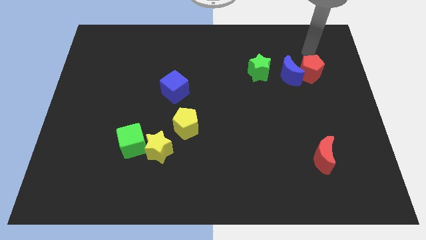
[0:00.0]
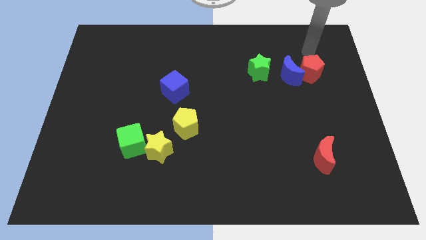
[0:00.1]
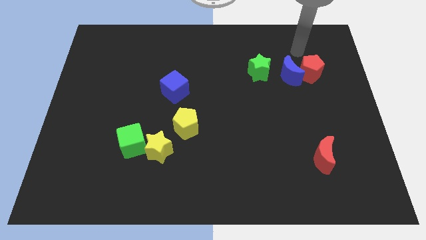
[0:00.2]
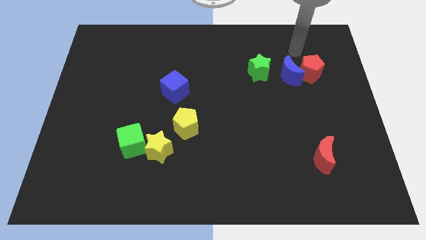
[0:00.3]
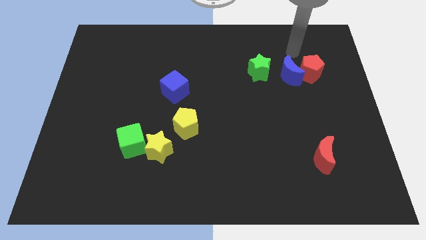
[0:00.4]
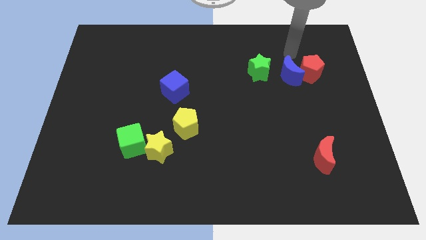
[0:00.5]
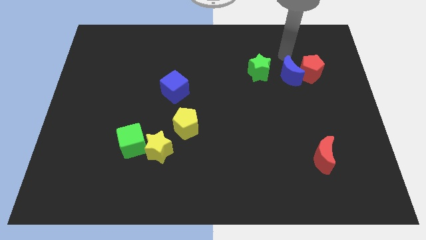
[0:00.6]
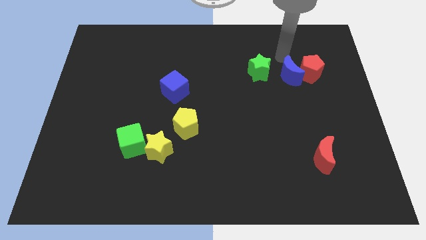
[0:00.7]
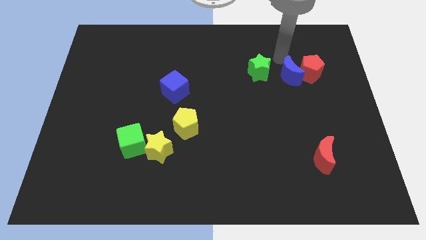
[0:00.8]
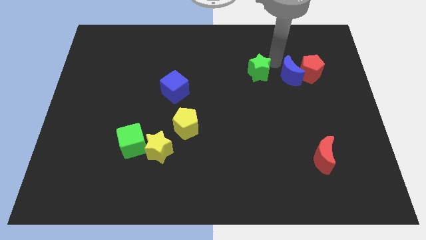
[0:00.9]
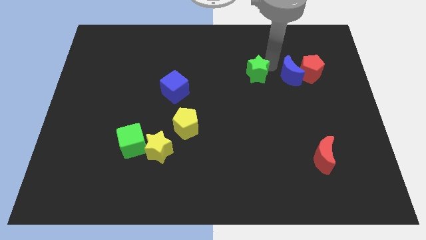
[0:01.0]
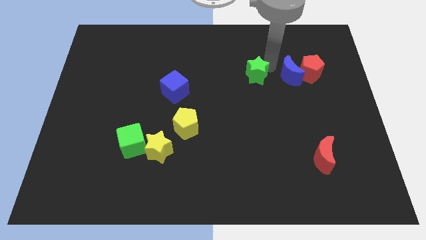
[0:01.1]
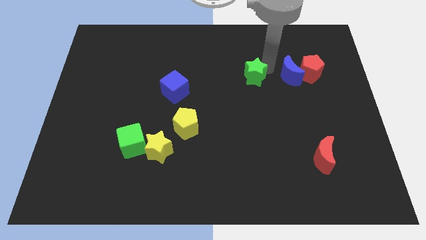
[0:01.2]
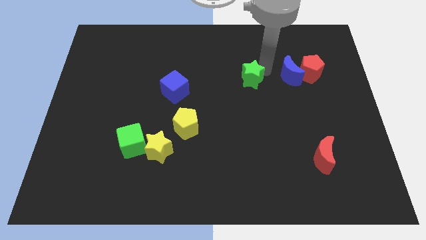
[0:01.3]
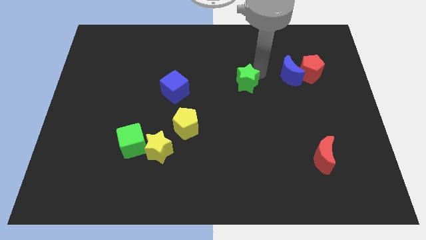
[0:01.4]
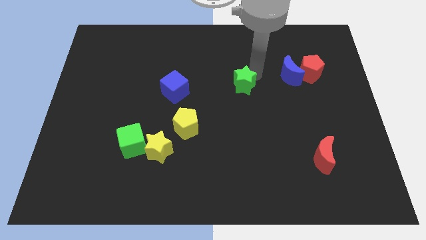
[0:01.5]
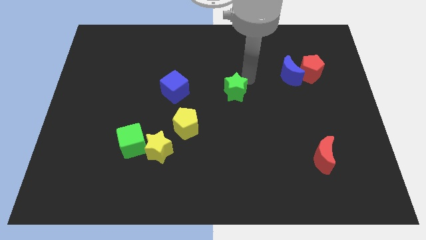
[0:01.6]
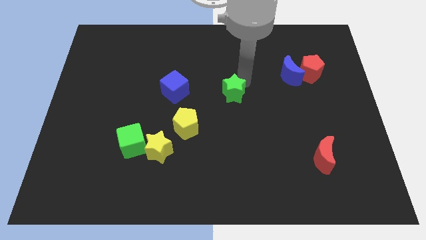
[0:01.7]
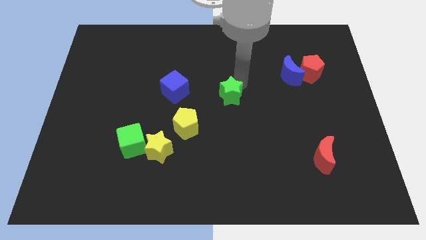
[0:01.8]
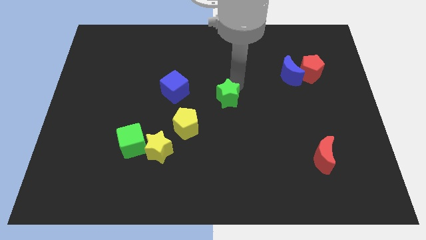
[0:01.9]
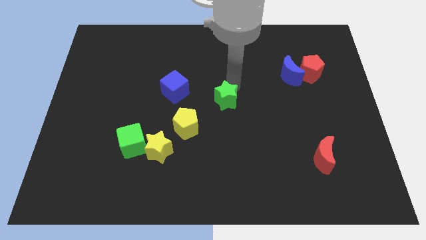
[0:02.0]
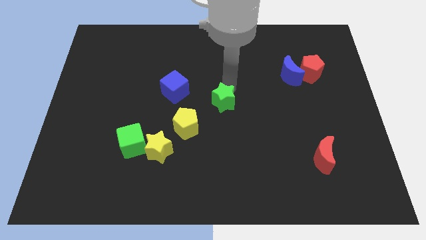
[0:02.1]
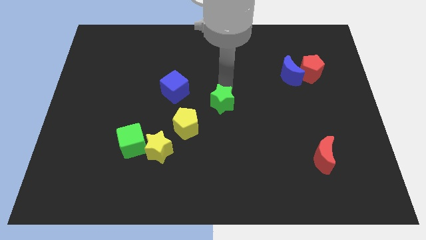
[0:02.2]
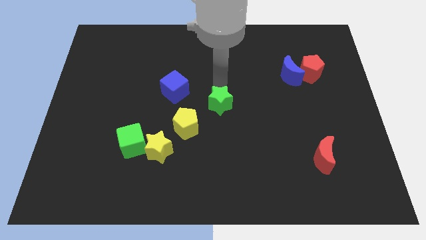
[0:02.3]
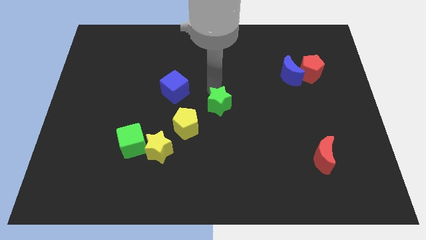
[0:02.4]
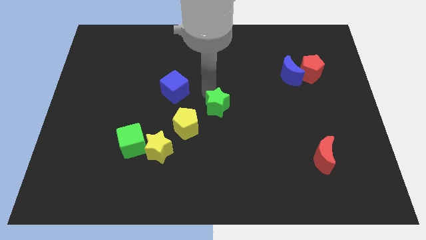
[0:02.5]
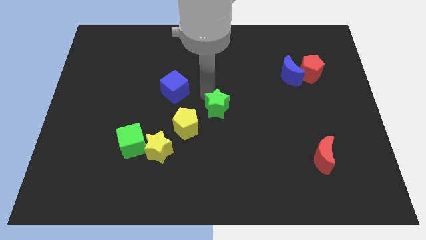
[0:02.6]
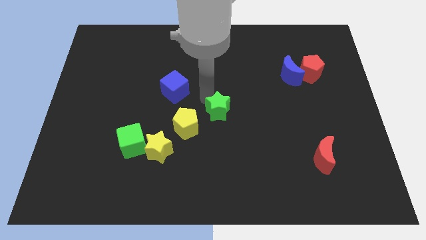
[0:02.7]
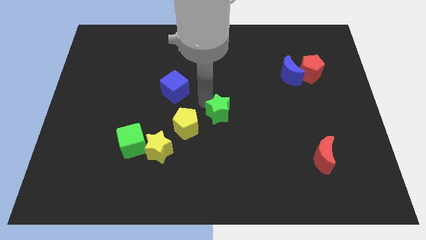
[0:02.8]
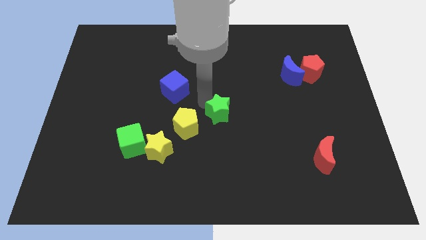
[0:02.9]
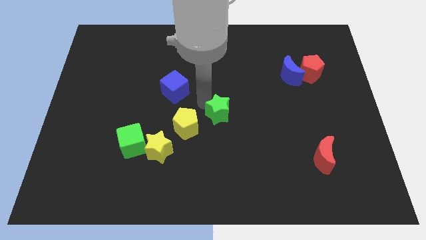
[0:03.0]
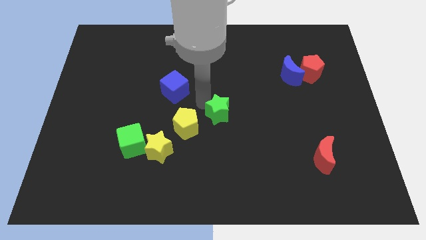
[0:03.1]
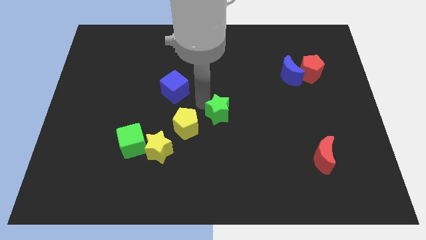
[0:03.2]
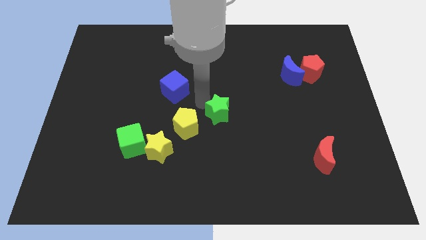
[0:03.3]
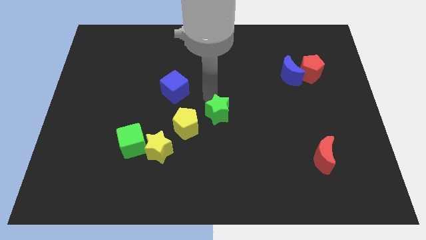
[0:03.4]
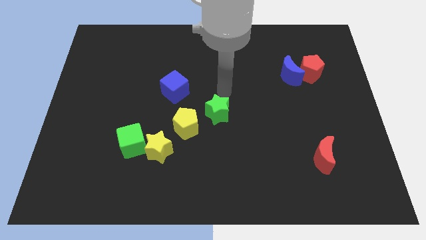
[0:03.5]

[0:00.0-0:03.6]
push green star towards the center of the board

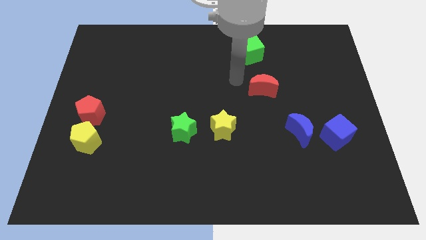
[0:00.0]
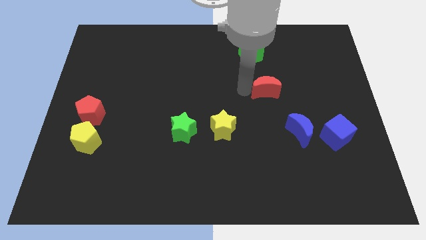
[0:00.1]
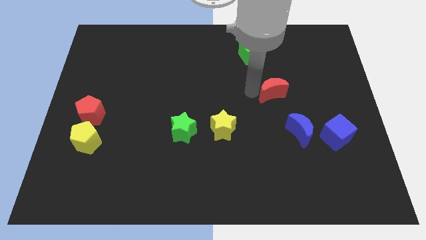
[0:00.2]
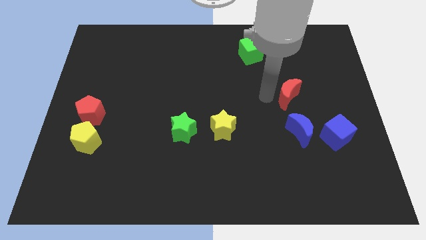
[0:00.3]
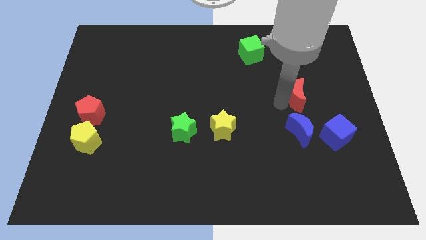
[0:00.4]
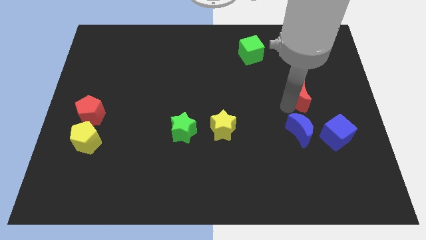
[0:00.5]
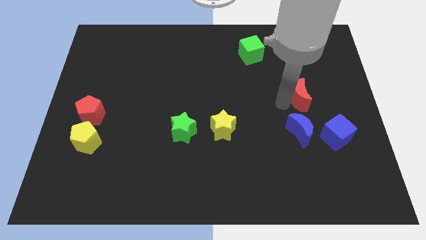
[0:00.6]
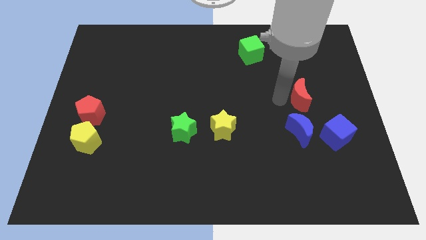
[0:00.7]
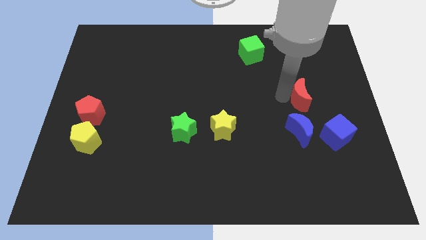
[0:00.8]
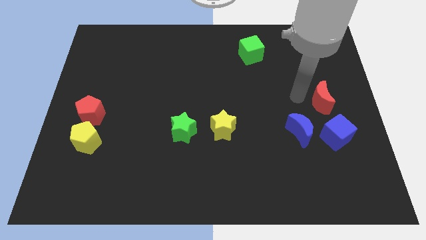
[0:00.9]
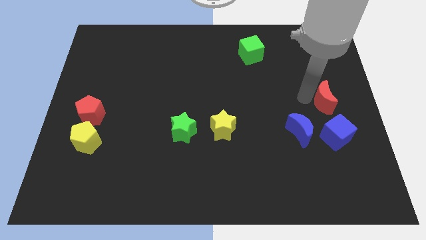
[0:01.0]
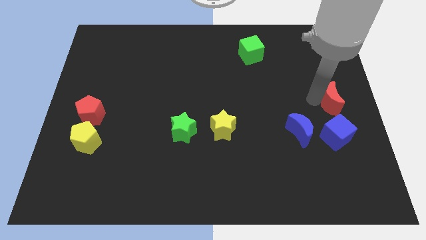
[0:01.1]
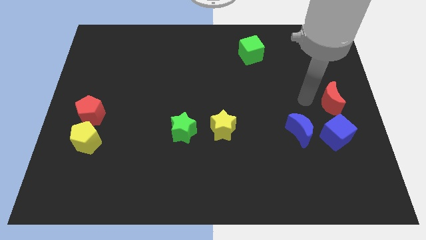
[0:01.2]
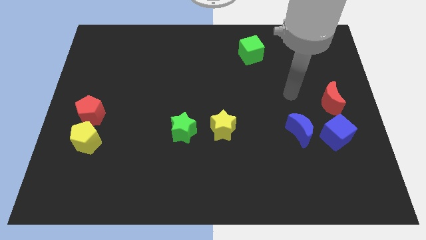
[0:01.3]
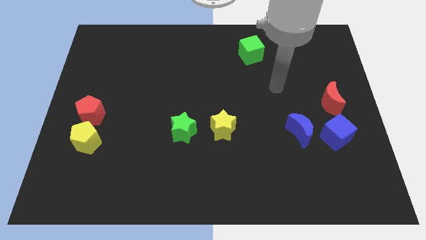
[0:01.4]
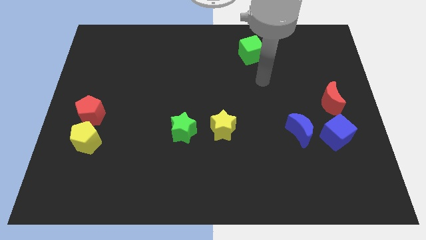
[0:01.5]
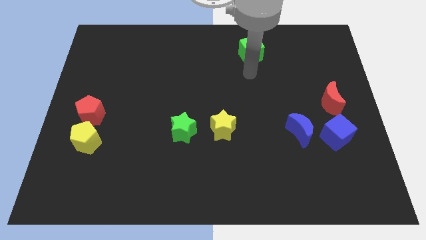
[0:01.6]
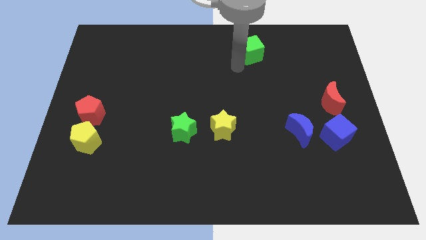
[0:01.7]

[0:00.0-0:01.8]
move the red crescent slightly towards the right center of the board

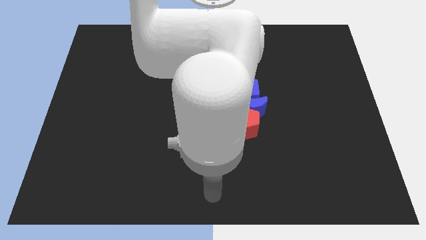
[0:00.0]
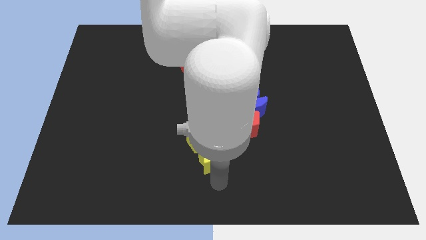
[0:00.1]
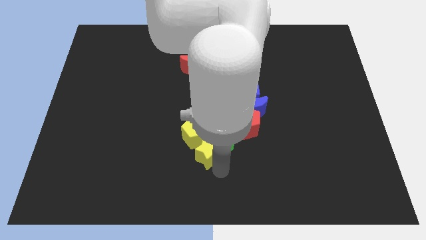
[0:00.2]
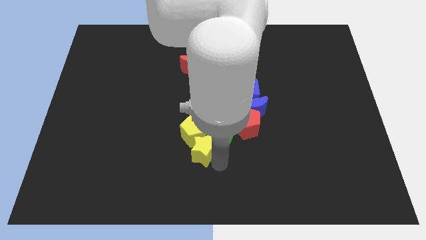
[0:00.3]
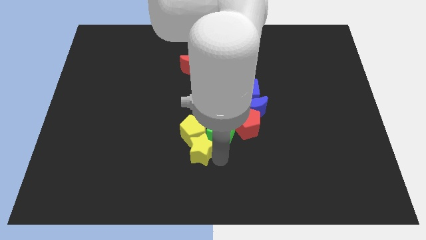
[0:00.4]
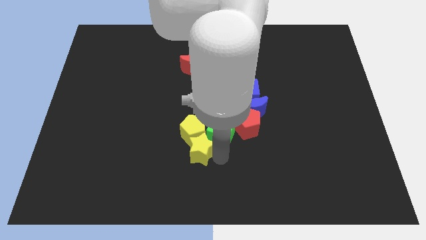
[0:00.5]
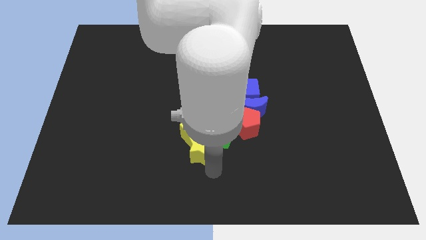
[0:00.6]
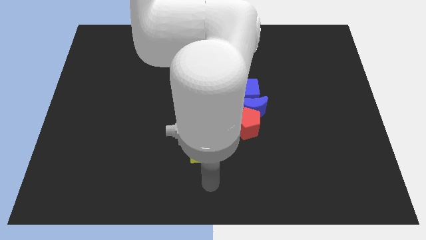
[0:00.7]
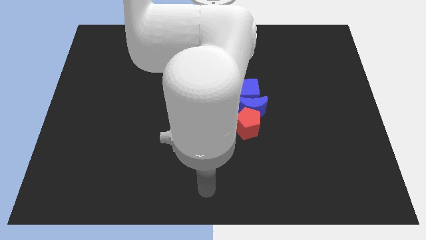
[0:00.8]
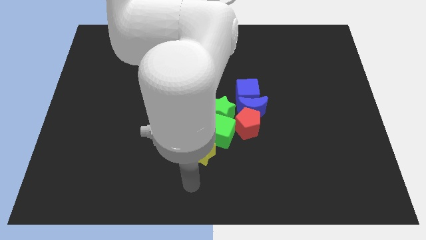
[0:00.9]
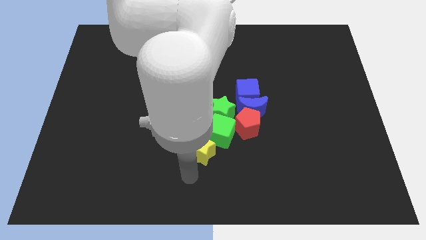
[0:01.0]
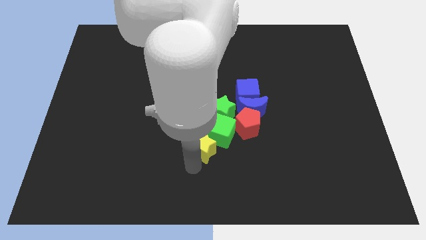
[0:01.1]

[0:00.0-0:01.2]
move the yellow star into the yellow pentagon

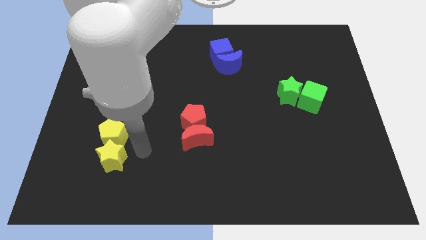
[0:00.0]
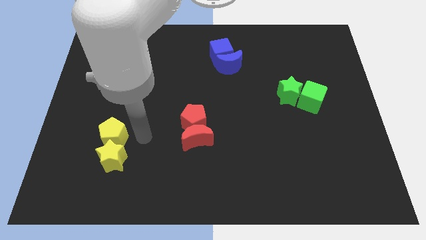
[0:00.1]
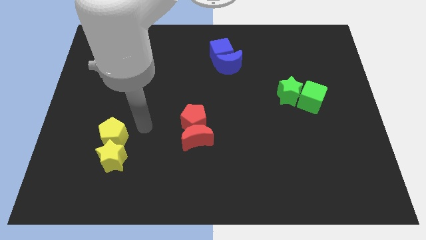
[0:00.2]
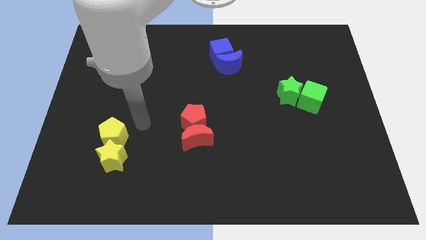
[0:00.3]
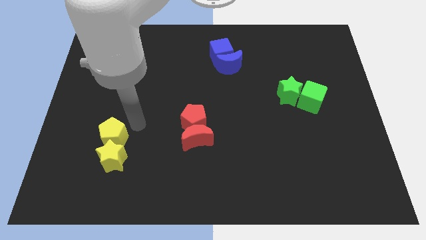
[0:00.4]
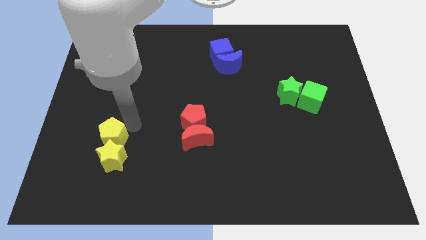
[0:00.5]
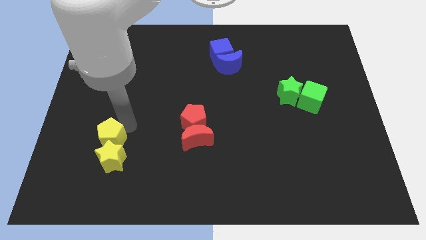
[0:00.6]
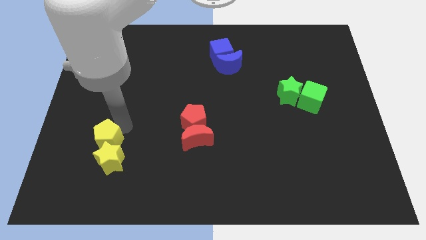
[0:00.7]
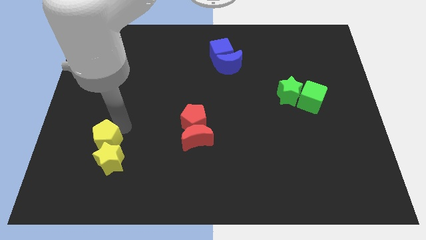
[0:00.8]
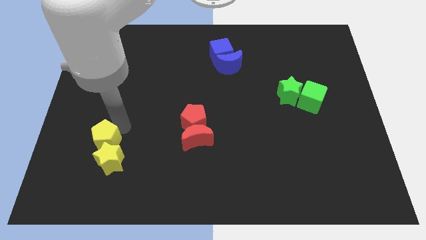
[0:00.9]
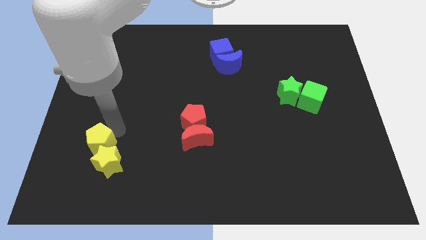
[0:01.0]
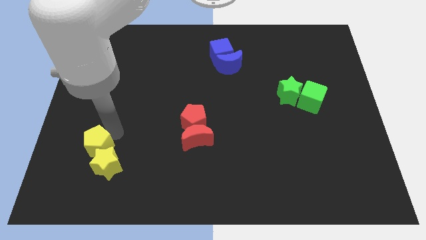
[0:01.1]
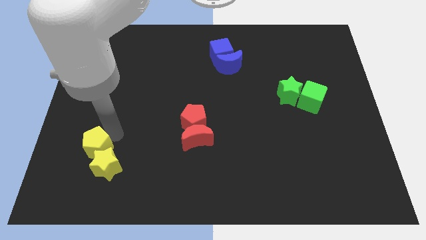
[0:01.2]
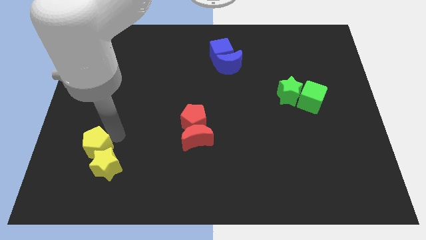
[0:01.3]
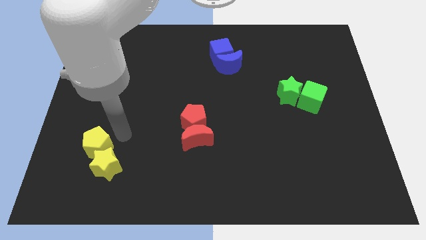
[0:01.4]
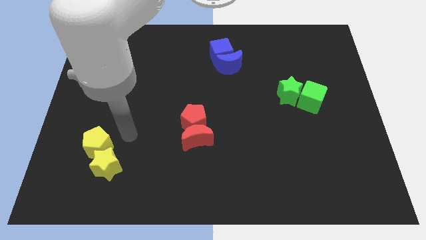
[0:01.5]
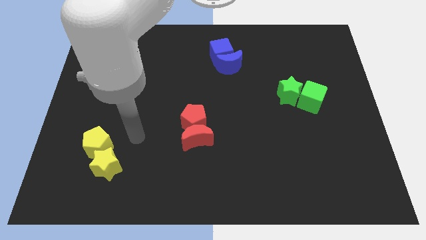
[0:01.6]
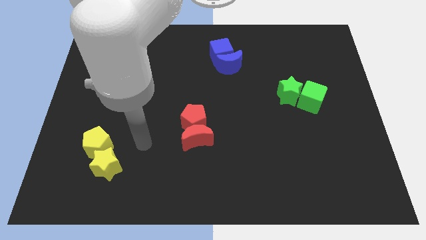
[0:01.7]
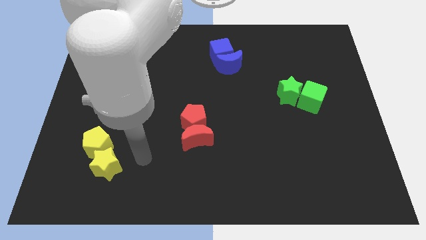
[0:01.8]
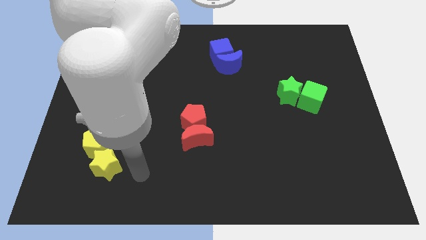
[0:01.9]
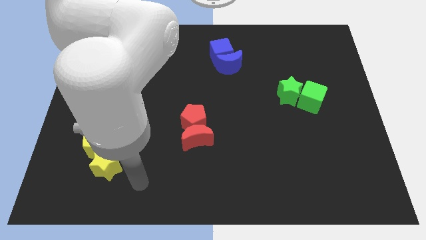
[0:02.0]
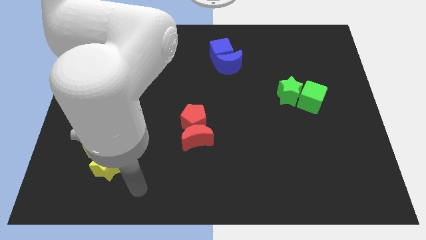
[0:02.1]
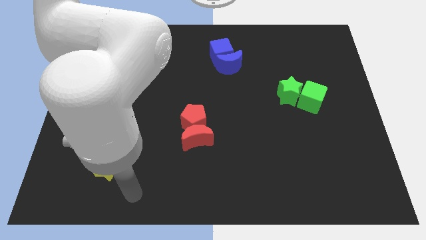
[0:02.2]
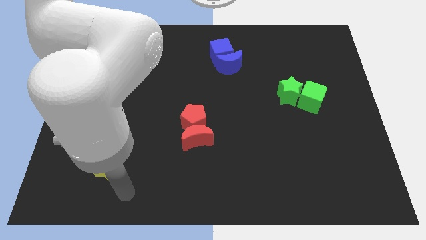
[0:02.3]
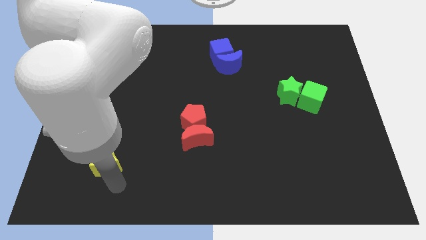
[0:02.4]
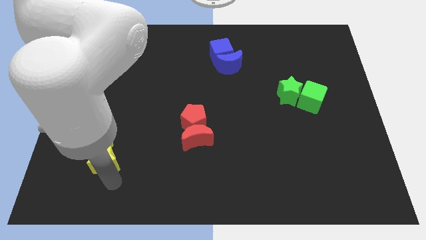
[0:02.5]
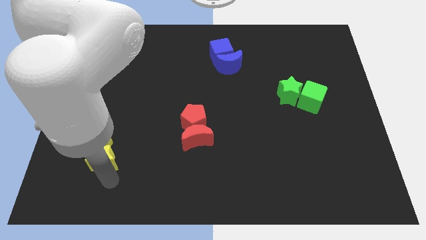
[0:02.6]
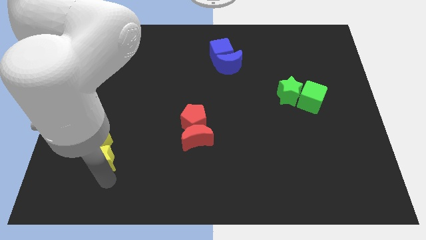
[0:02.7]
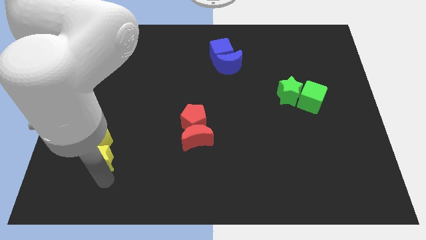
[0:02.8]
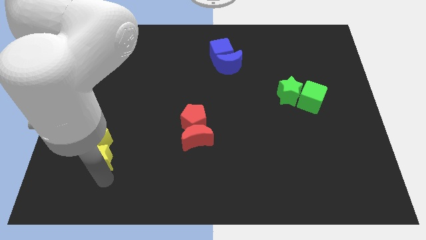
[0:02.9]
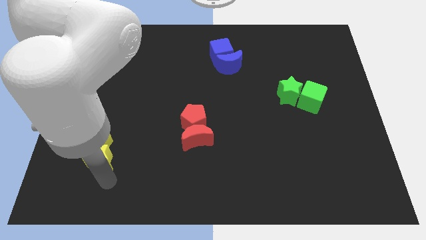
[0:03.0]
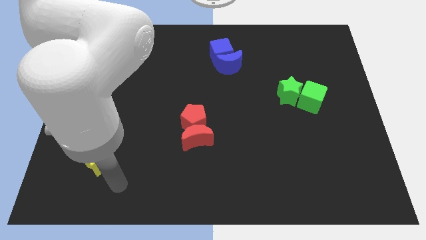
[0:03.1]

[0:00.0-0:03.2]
touch the bottom side of the yellow star
